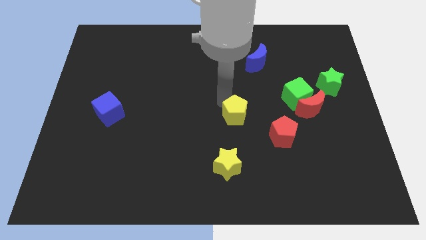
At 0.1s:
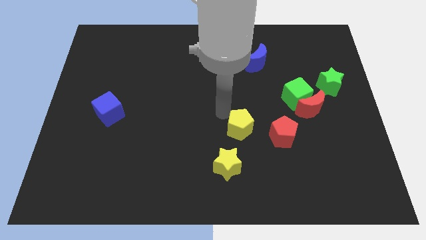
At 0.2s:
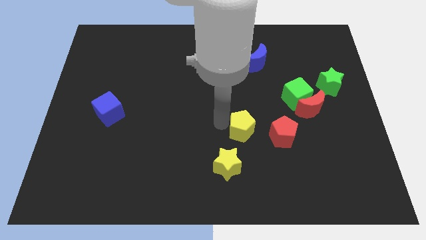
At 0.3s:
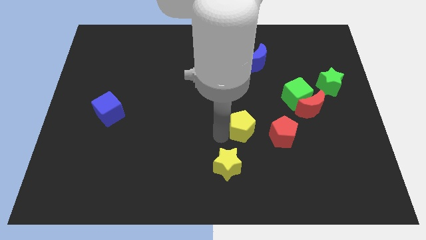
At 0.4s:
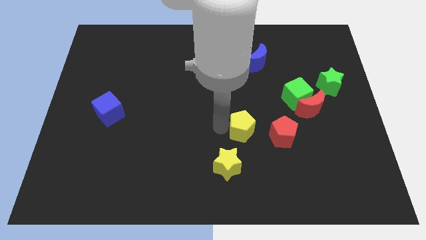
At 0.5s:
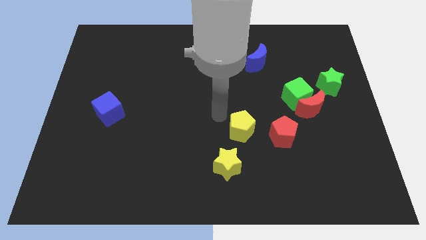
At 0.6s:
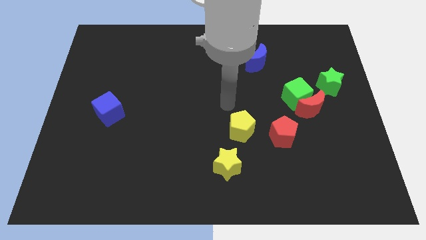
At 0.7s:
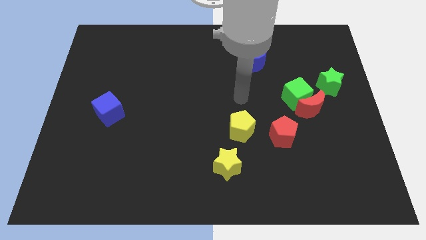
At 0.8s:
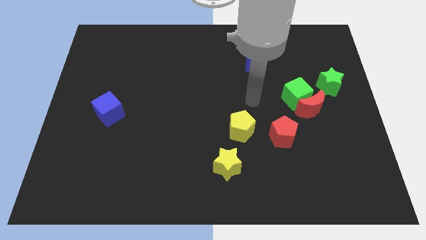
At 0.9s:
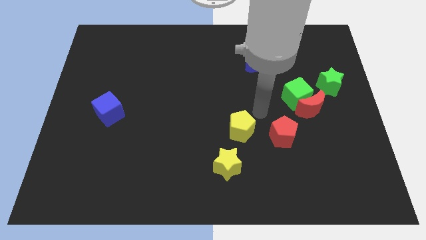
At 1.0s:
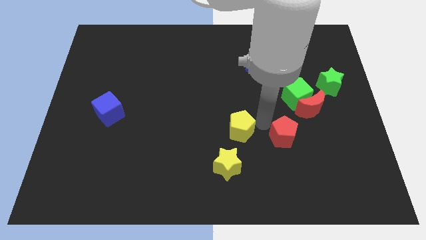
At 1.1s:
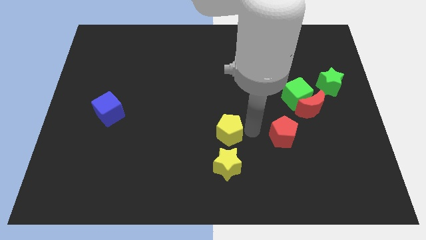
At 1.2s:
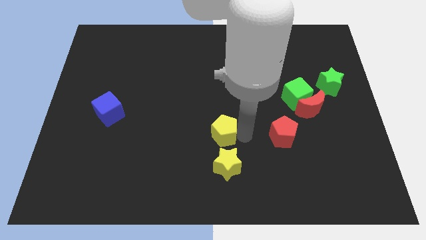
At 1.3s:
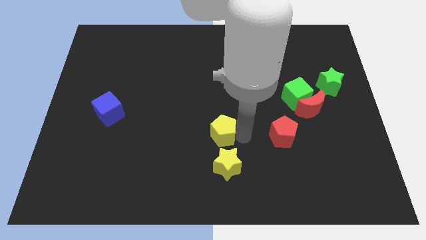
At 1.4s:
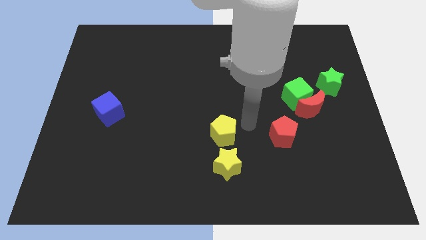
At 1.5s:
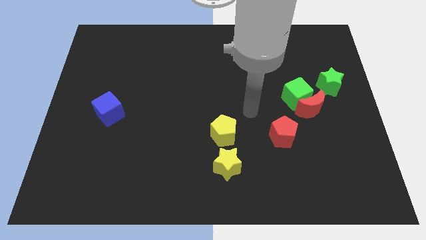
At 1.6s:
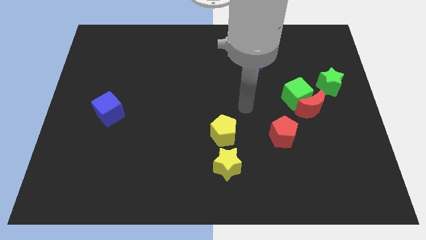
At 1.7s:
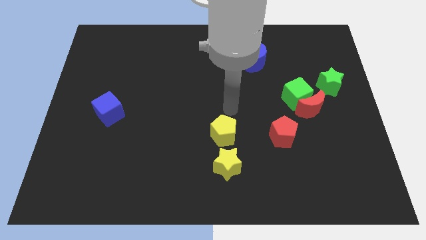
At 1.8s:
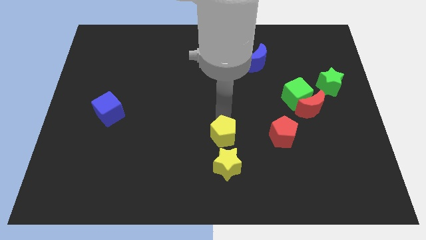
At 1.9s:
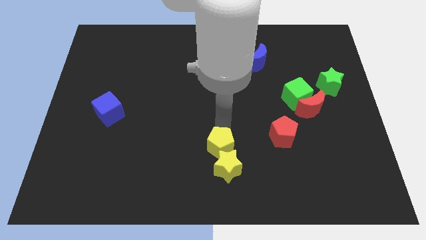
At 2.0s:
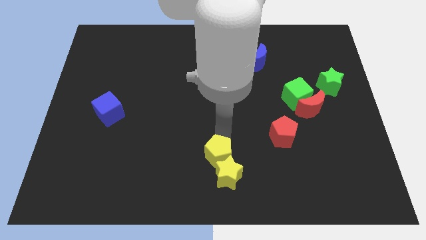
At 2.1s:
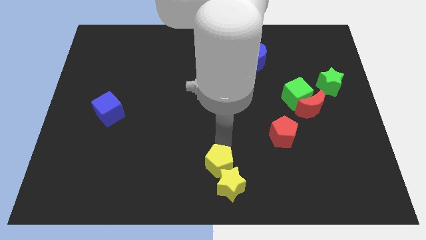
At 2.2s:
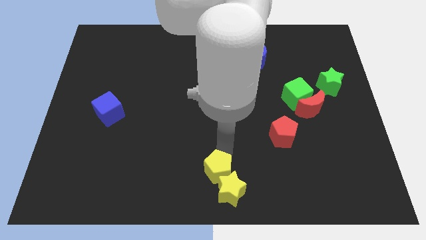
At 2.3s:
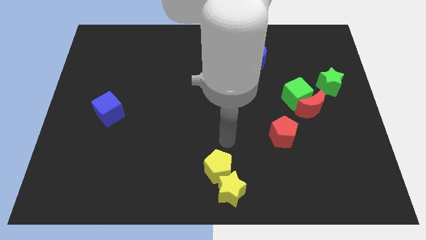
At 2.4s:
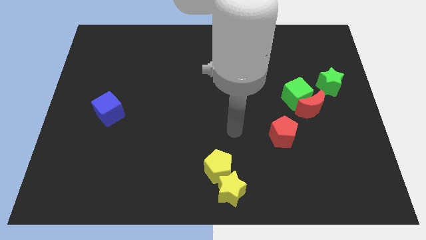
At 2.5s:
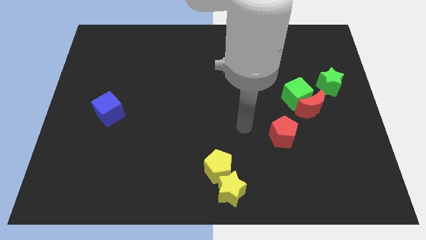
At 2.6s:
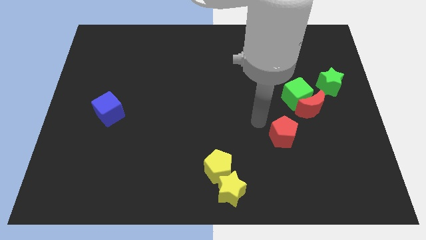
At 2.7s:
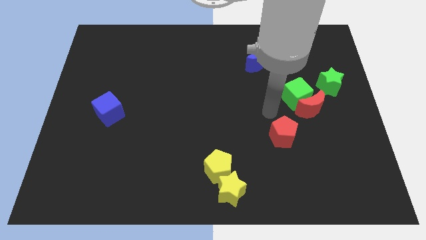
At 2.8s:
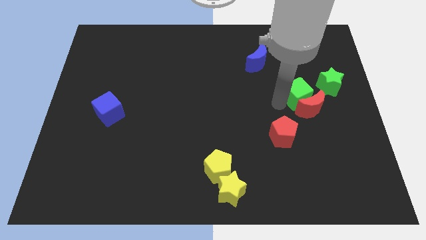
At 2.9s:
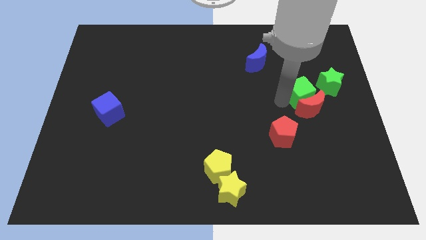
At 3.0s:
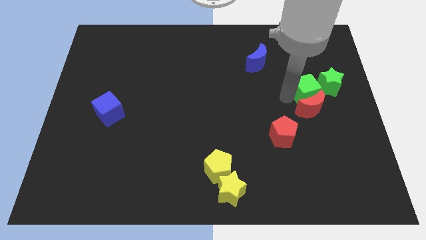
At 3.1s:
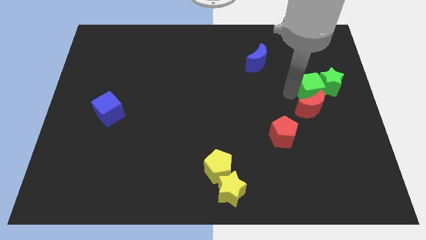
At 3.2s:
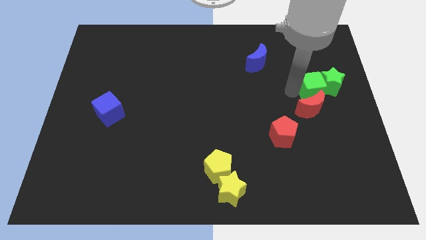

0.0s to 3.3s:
push both the yellow blocks to the bottom center

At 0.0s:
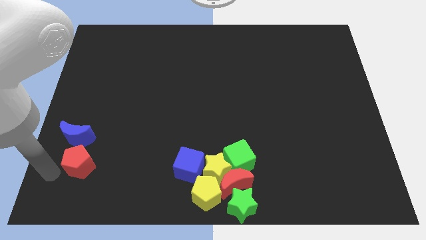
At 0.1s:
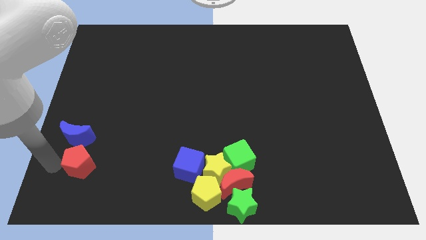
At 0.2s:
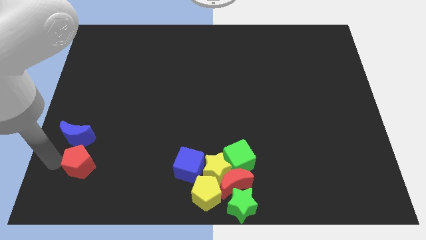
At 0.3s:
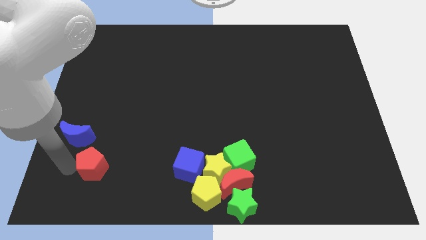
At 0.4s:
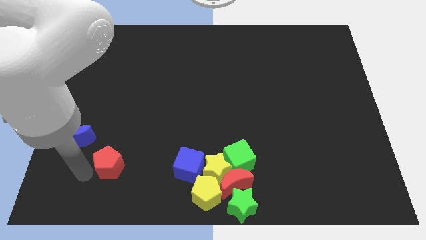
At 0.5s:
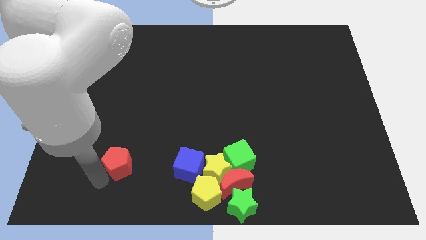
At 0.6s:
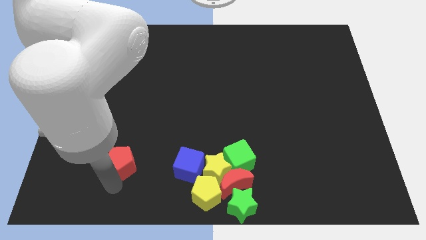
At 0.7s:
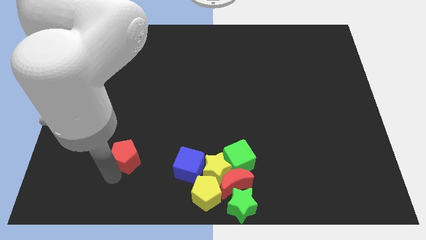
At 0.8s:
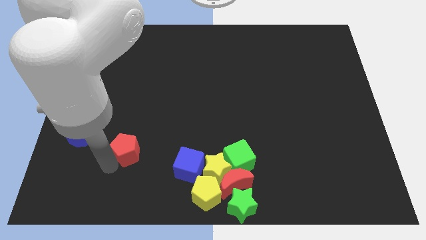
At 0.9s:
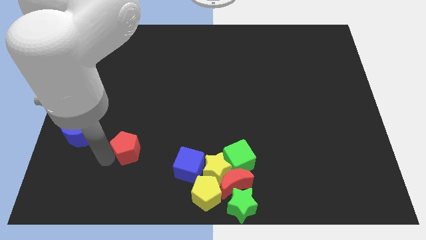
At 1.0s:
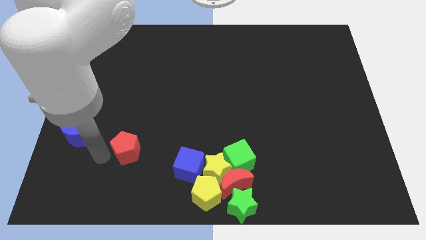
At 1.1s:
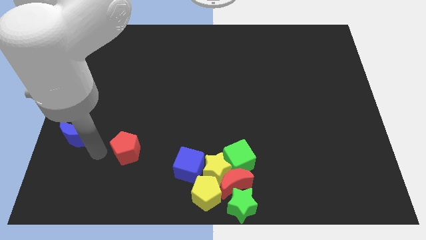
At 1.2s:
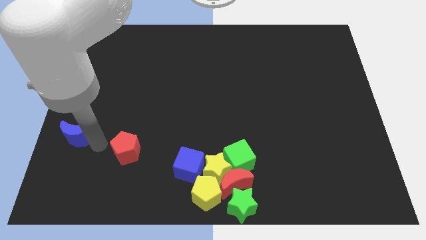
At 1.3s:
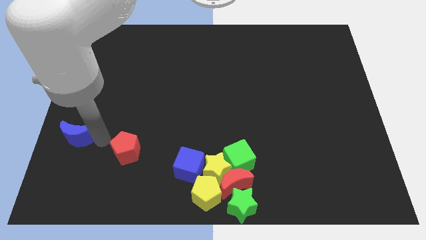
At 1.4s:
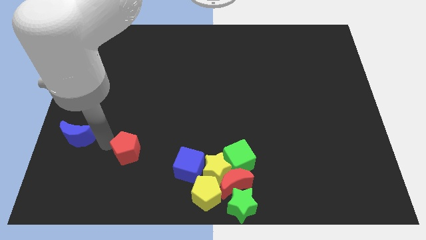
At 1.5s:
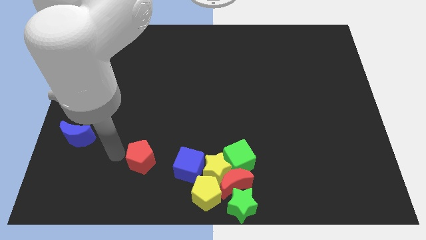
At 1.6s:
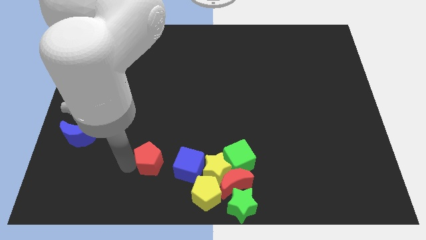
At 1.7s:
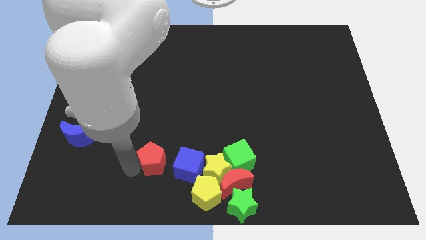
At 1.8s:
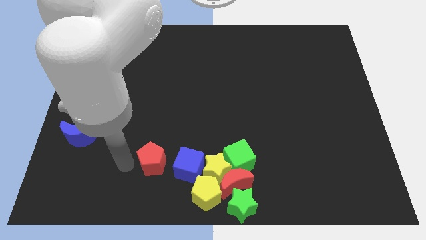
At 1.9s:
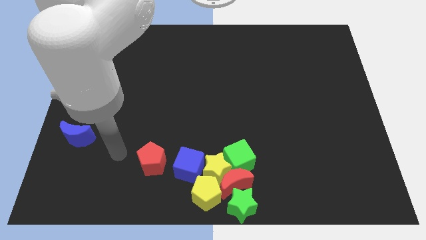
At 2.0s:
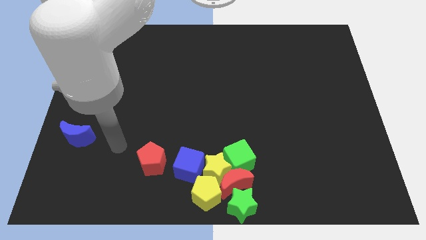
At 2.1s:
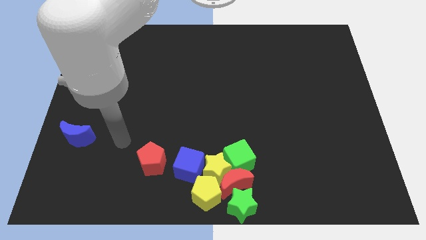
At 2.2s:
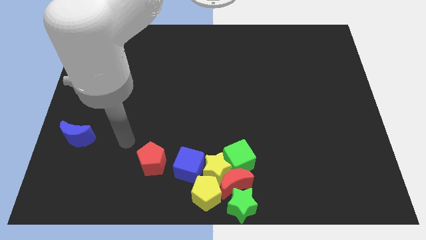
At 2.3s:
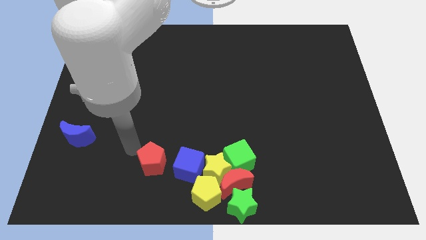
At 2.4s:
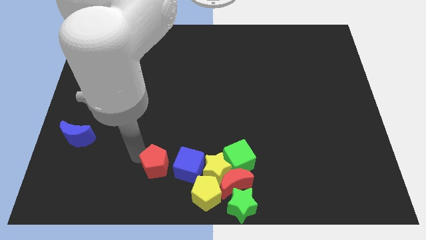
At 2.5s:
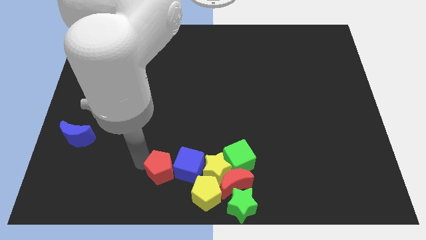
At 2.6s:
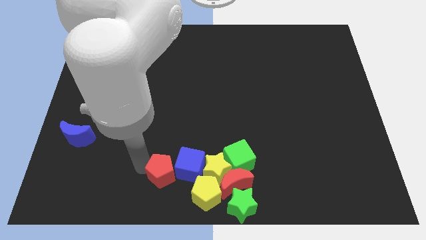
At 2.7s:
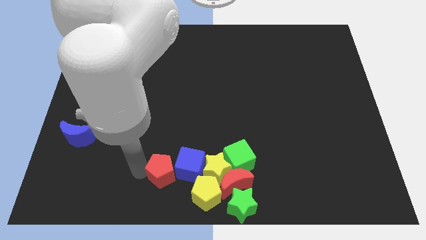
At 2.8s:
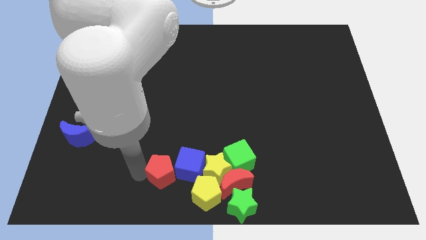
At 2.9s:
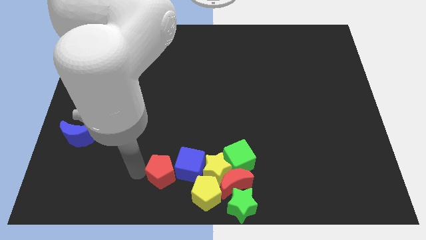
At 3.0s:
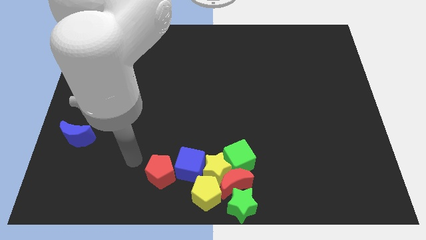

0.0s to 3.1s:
push the red pentagon towards the left of the blue cube

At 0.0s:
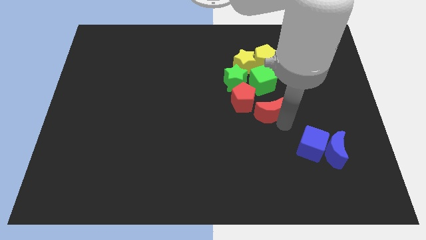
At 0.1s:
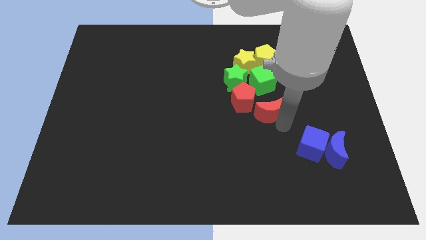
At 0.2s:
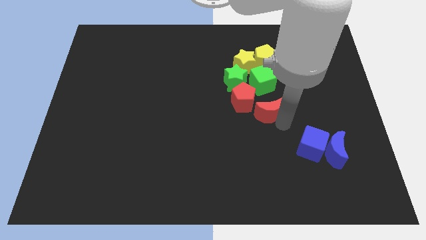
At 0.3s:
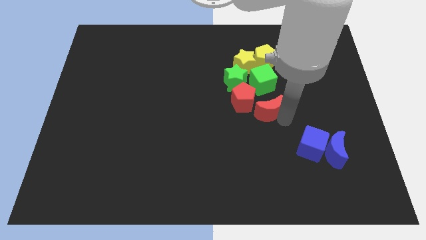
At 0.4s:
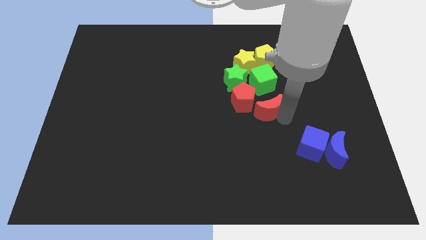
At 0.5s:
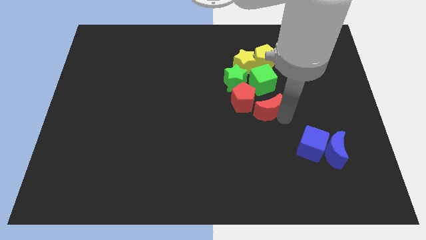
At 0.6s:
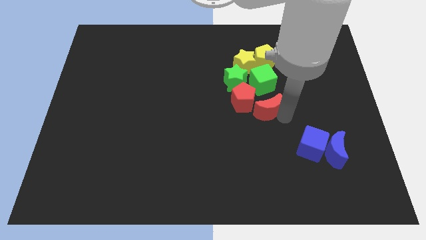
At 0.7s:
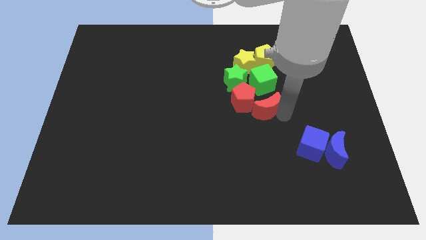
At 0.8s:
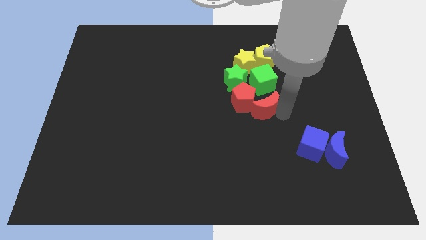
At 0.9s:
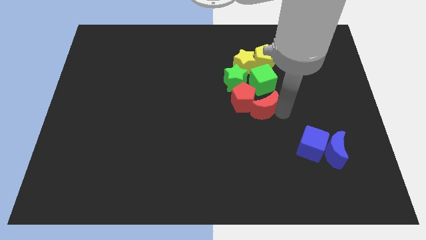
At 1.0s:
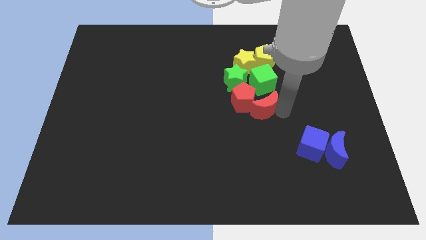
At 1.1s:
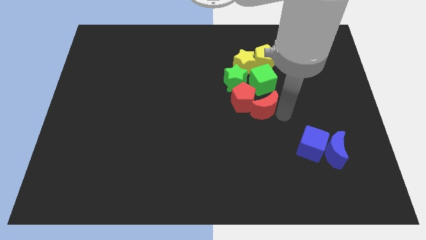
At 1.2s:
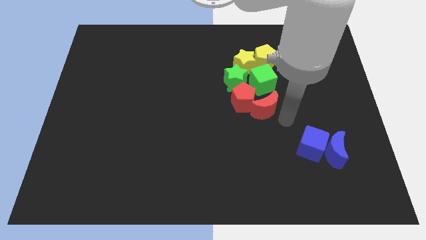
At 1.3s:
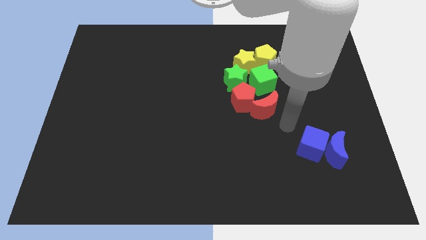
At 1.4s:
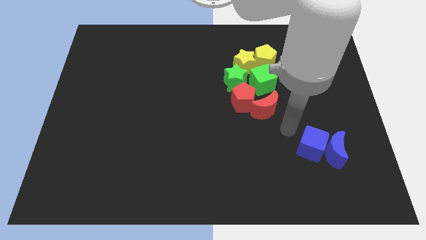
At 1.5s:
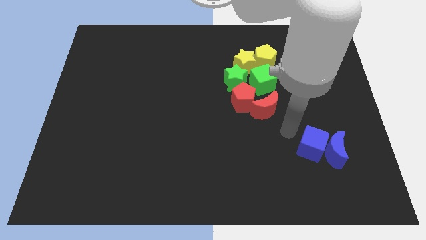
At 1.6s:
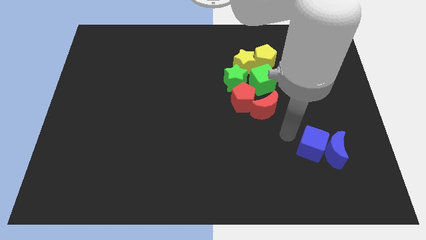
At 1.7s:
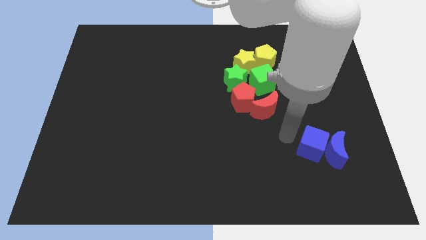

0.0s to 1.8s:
move the red crescent to the bottom right of the red pentagon

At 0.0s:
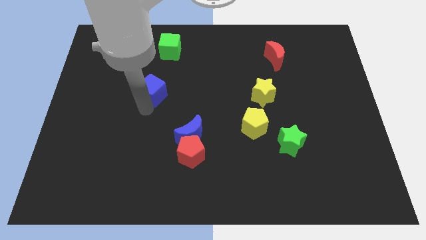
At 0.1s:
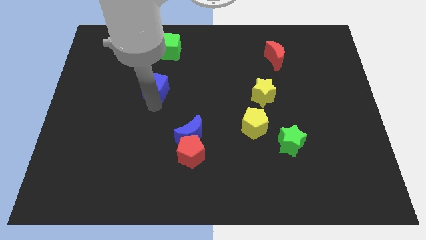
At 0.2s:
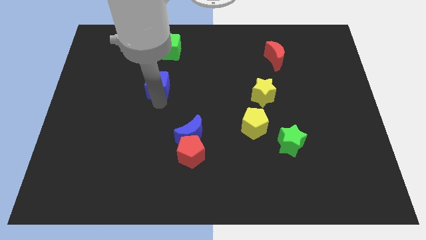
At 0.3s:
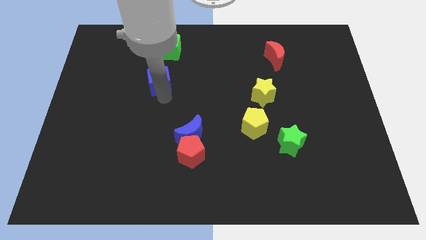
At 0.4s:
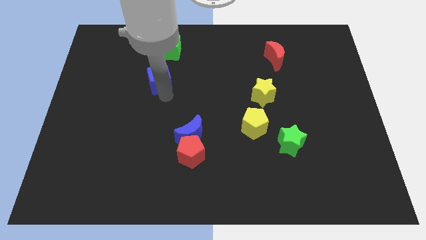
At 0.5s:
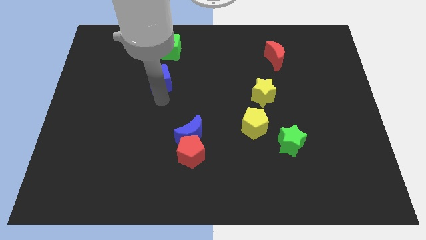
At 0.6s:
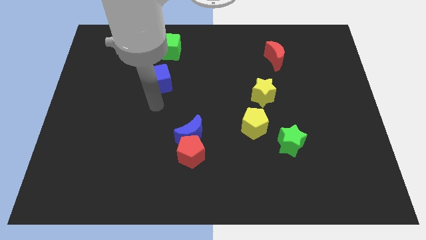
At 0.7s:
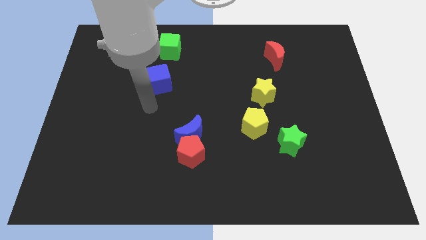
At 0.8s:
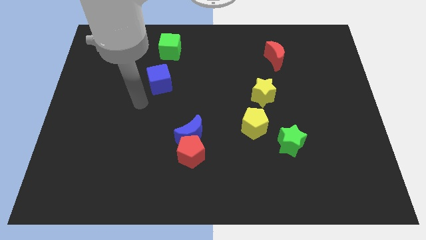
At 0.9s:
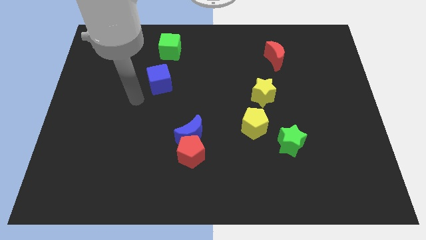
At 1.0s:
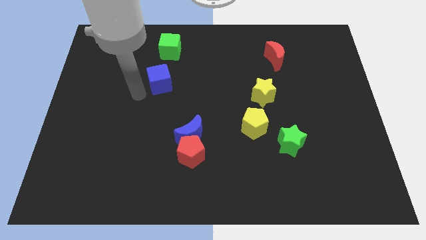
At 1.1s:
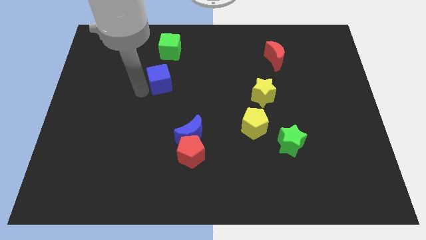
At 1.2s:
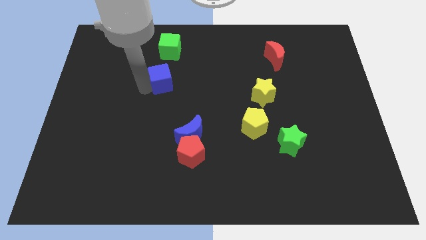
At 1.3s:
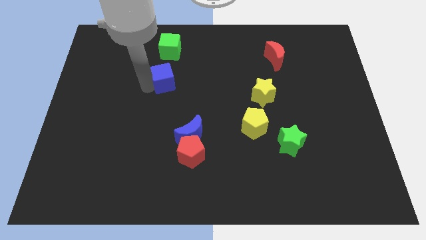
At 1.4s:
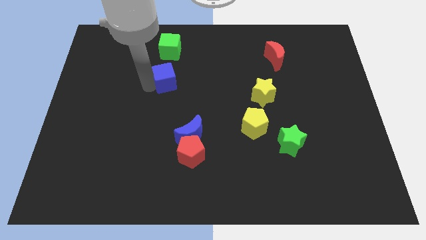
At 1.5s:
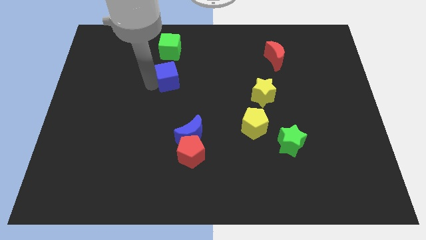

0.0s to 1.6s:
move the blue cube towards green cube
